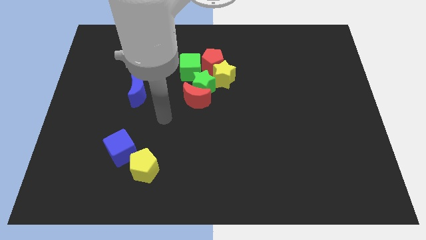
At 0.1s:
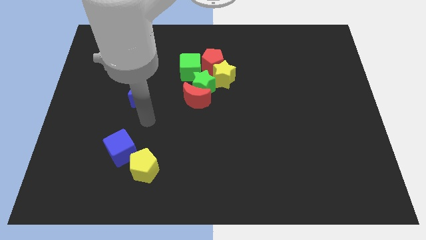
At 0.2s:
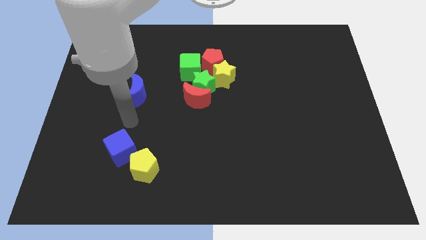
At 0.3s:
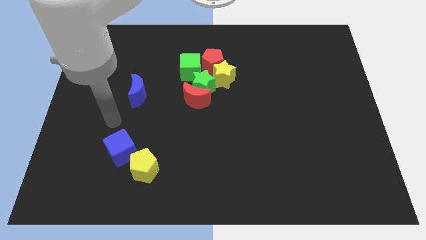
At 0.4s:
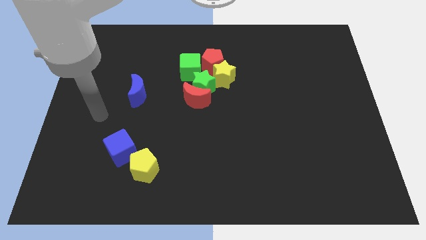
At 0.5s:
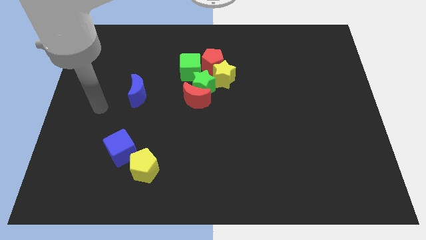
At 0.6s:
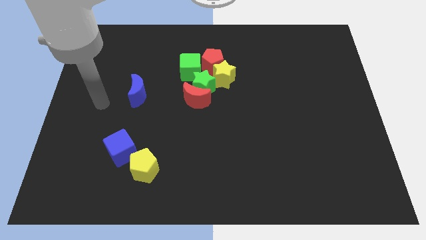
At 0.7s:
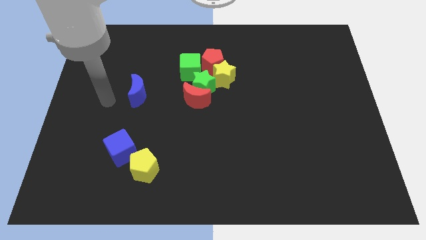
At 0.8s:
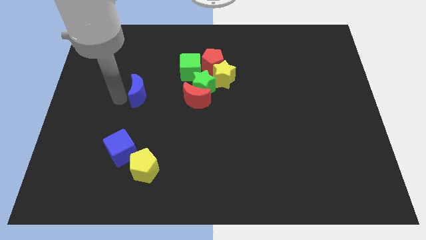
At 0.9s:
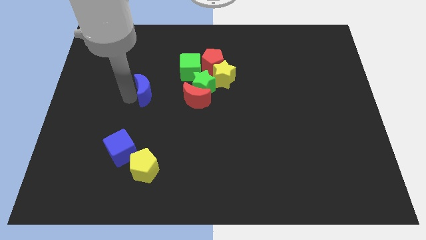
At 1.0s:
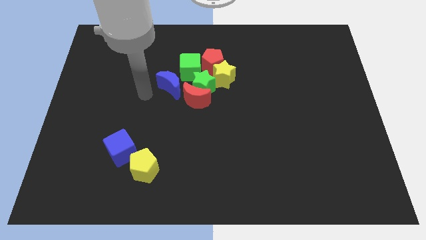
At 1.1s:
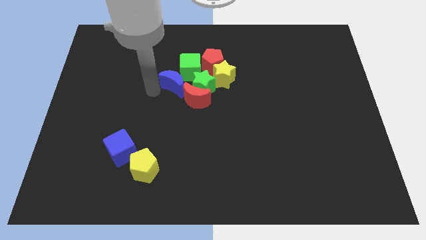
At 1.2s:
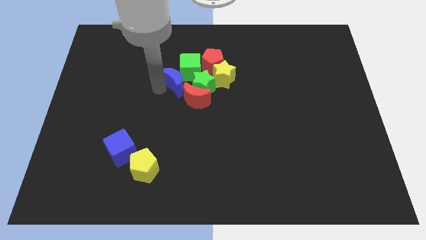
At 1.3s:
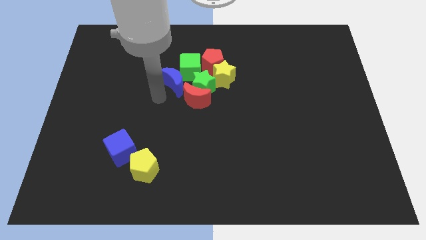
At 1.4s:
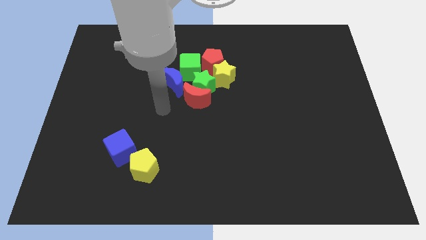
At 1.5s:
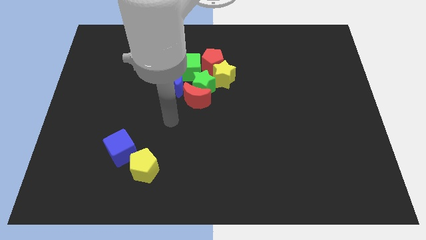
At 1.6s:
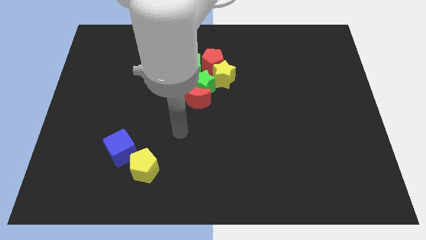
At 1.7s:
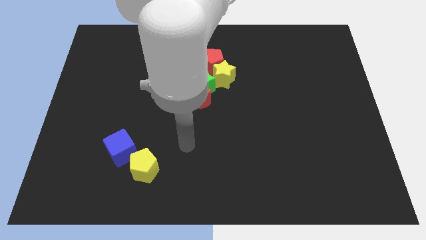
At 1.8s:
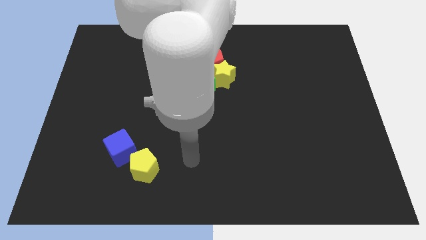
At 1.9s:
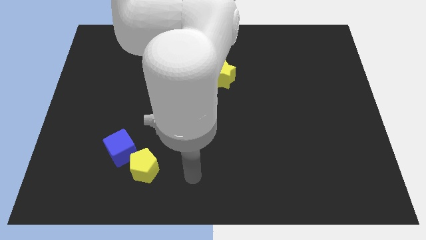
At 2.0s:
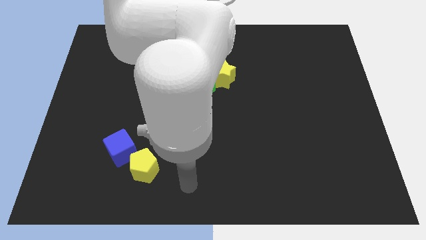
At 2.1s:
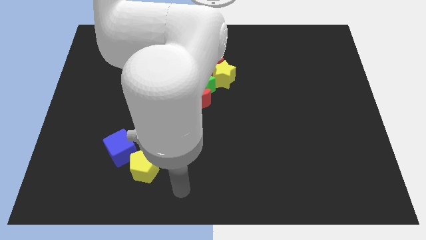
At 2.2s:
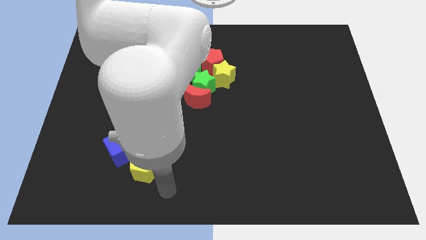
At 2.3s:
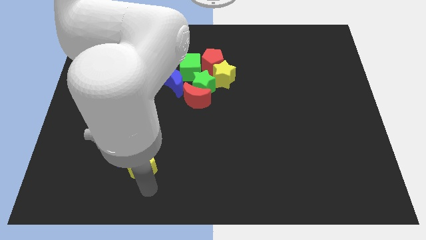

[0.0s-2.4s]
push the blue moon into the group of blocks

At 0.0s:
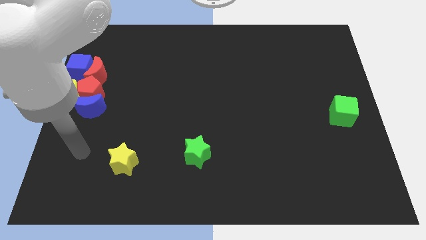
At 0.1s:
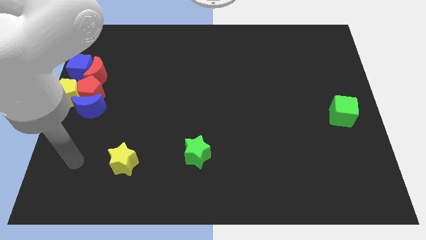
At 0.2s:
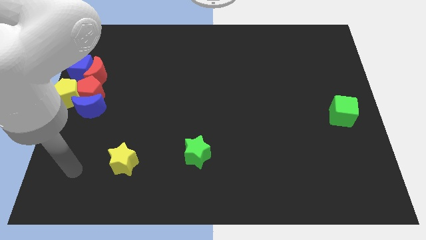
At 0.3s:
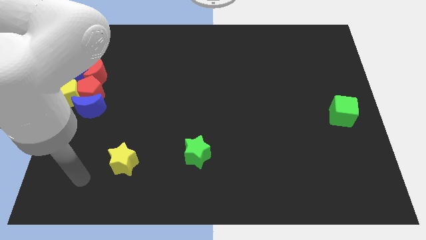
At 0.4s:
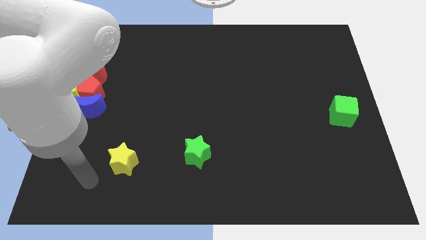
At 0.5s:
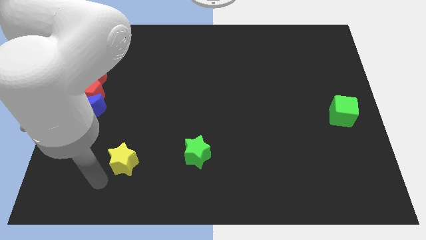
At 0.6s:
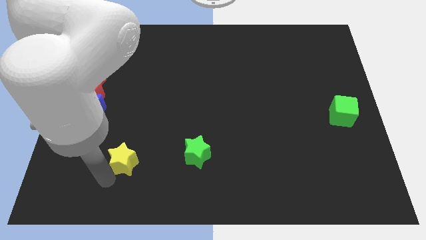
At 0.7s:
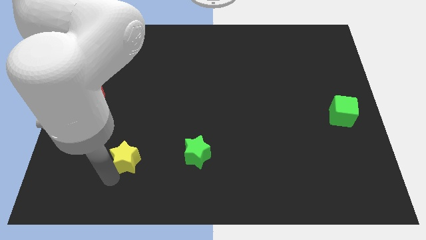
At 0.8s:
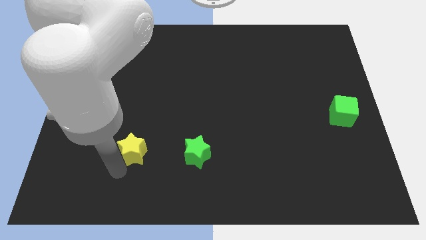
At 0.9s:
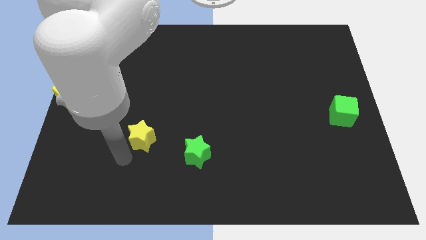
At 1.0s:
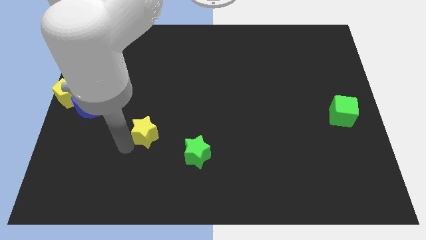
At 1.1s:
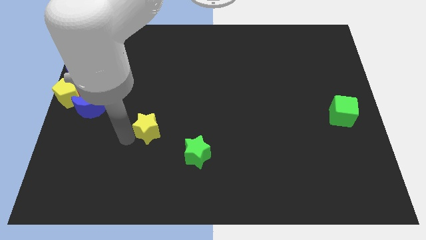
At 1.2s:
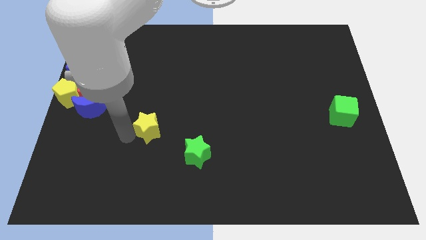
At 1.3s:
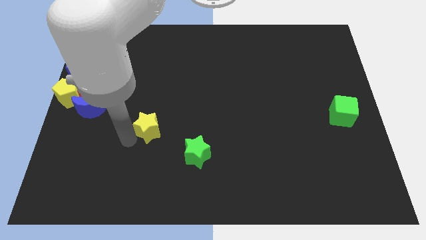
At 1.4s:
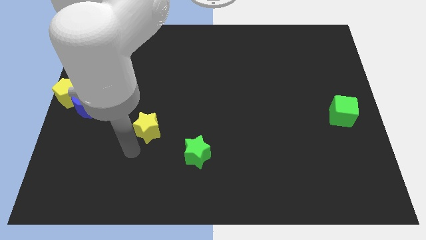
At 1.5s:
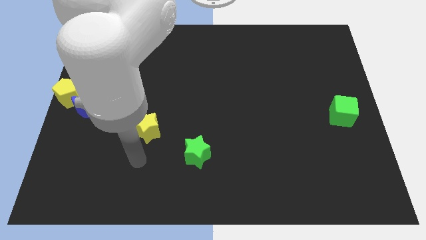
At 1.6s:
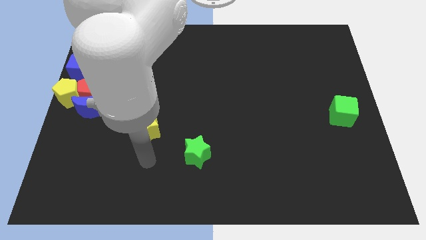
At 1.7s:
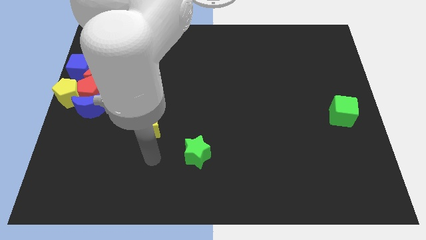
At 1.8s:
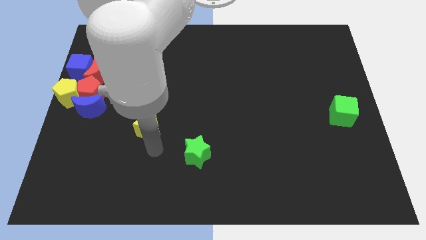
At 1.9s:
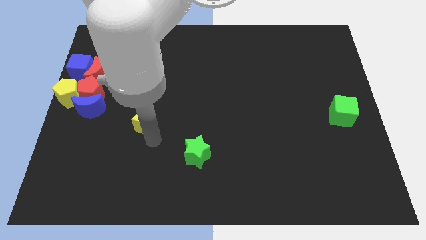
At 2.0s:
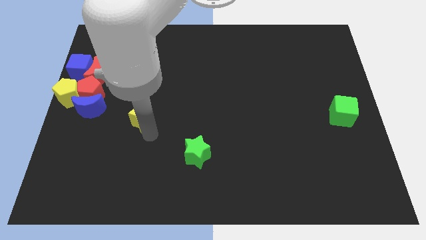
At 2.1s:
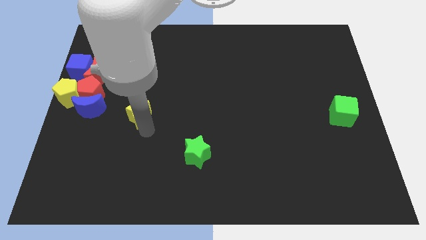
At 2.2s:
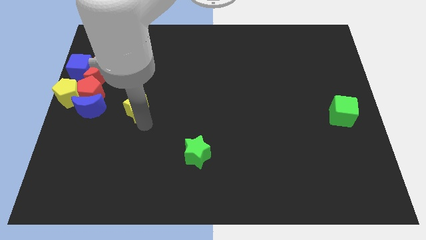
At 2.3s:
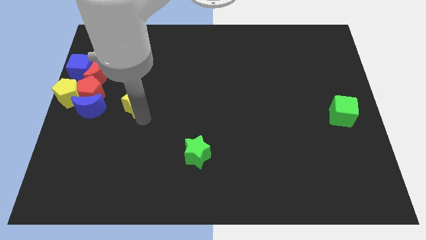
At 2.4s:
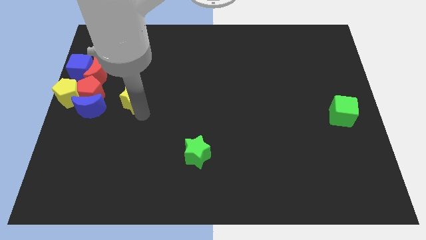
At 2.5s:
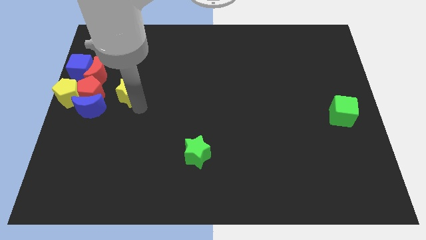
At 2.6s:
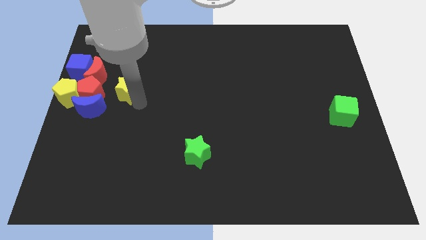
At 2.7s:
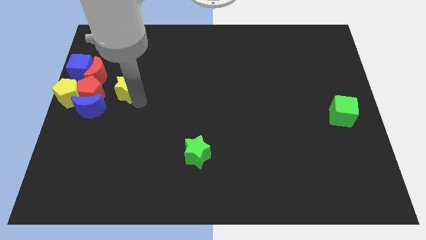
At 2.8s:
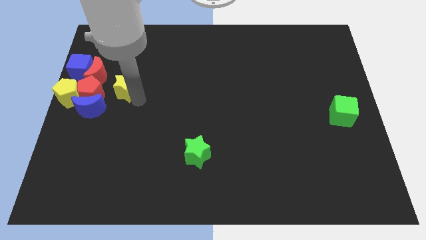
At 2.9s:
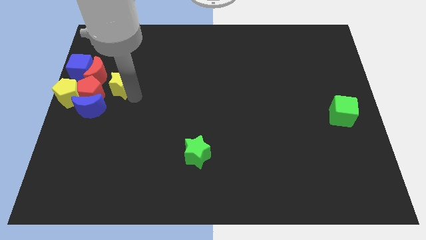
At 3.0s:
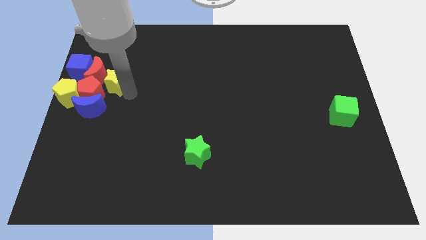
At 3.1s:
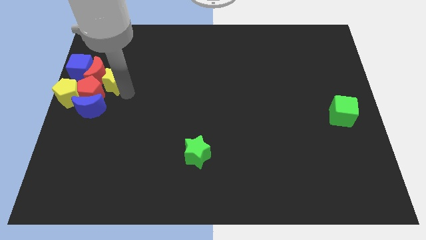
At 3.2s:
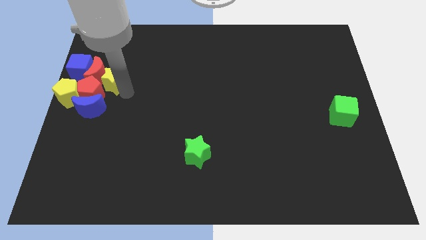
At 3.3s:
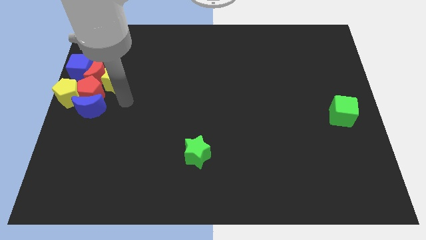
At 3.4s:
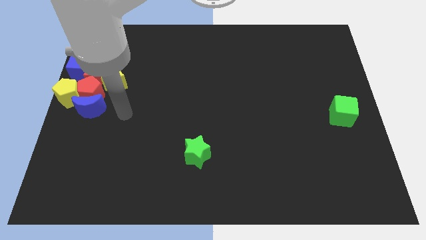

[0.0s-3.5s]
drag the yellow star slightly upwards

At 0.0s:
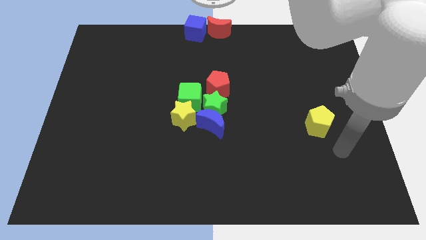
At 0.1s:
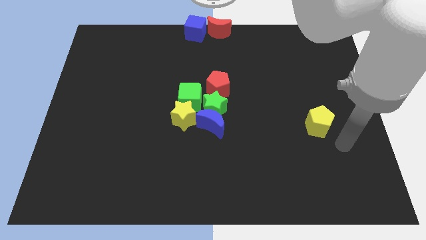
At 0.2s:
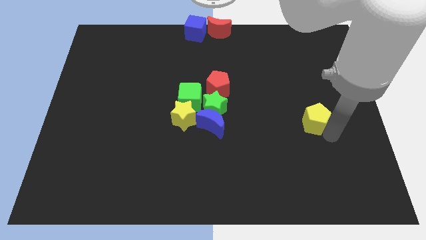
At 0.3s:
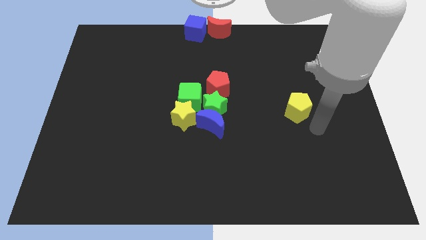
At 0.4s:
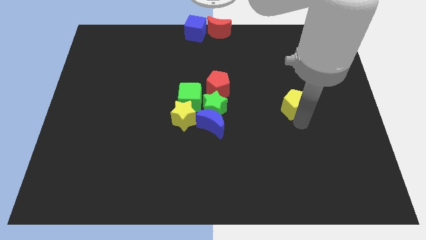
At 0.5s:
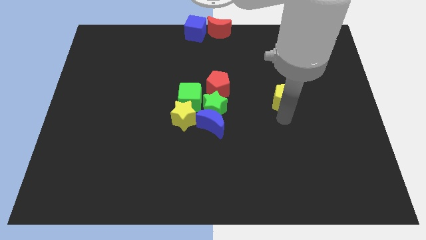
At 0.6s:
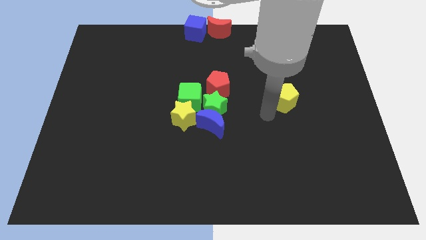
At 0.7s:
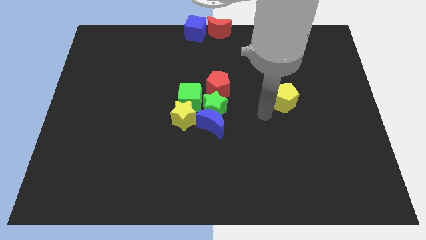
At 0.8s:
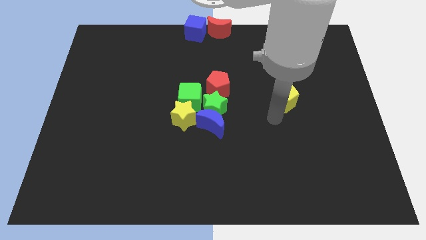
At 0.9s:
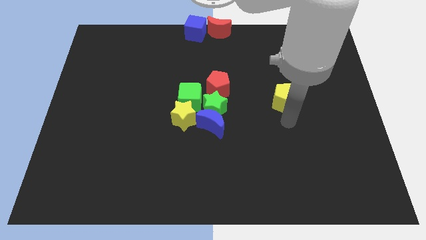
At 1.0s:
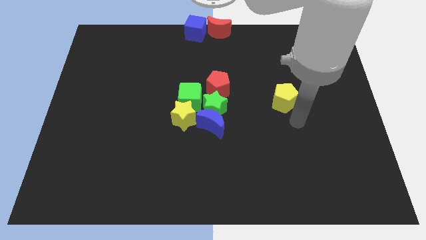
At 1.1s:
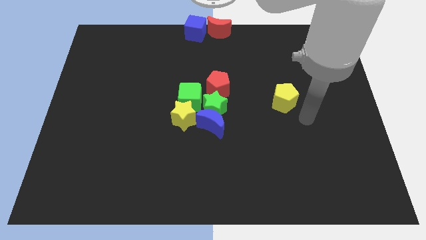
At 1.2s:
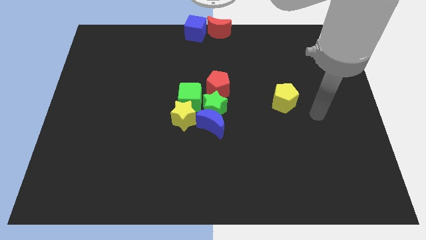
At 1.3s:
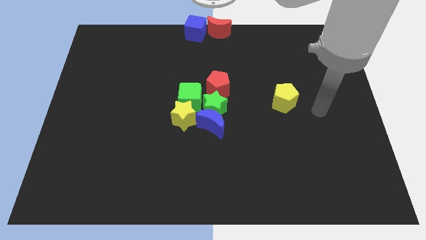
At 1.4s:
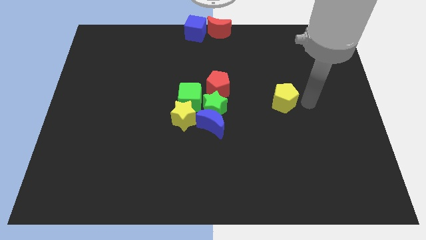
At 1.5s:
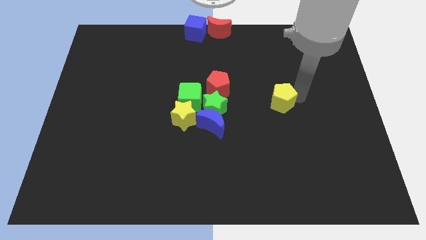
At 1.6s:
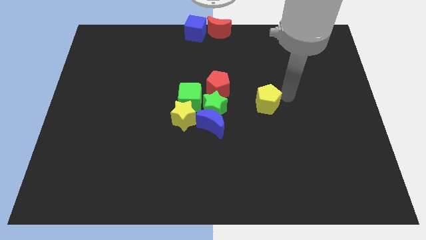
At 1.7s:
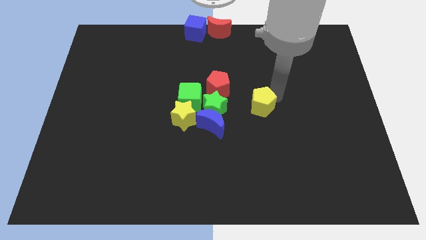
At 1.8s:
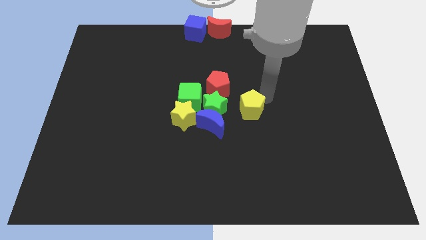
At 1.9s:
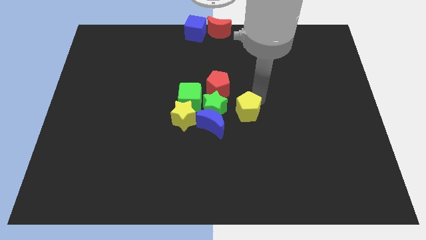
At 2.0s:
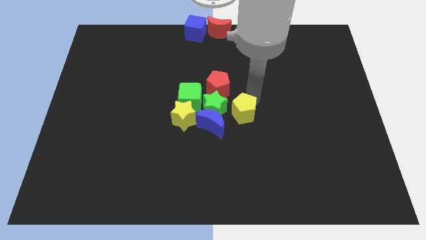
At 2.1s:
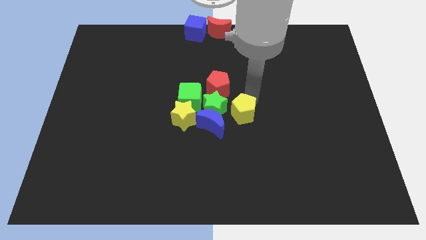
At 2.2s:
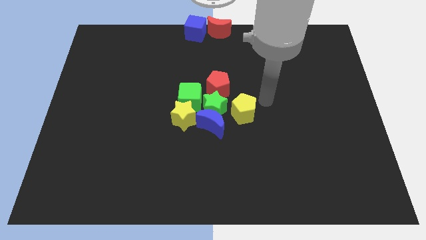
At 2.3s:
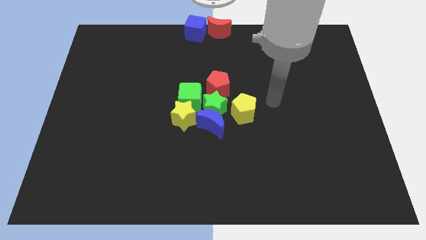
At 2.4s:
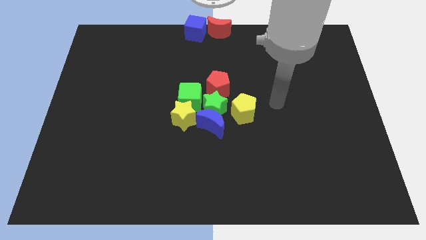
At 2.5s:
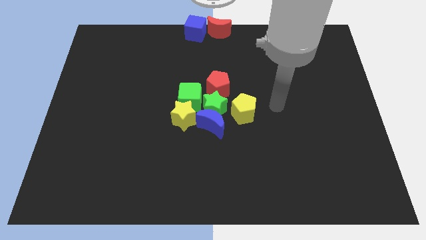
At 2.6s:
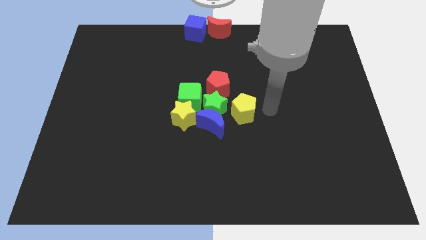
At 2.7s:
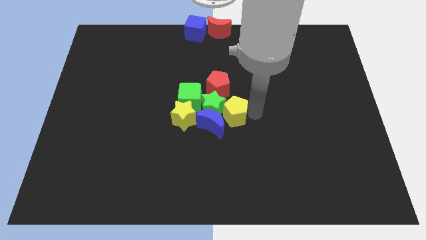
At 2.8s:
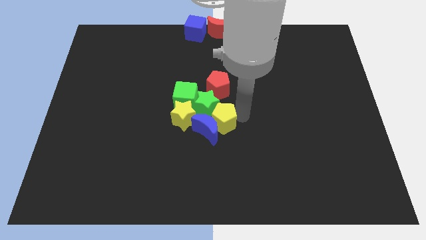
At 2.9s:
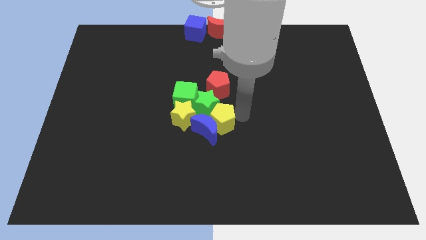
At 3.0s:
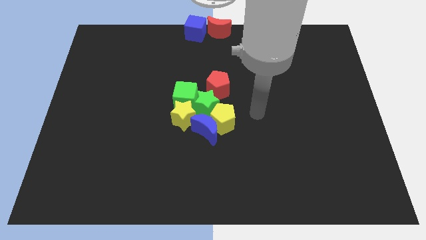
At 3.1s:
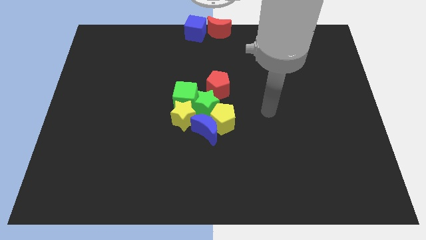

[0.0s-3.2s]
push the yellow pentagon into the group of blocks
